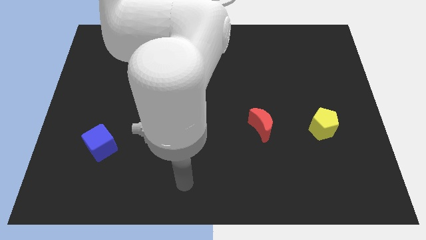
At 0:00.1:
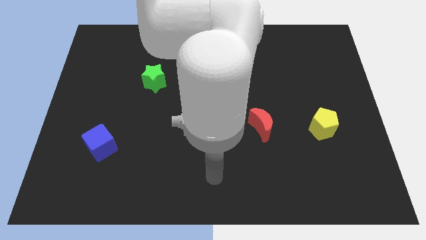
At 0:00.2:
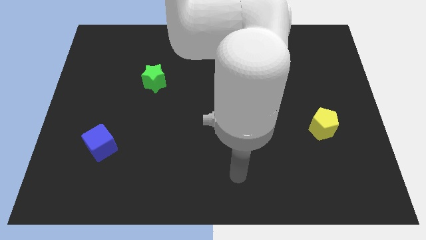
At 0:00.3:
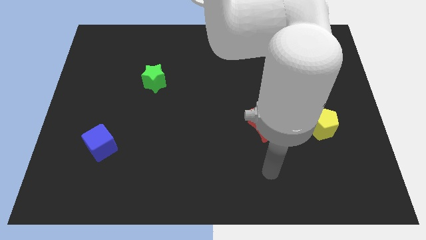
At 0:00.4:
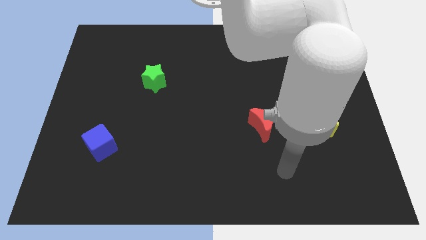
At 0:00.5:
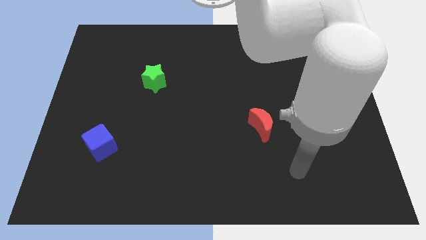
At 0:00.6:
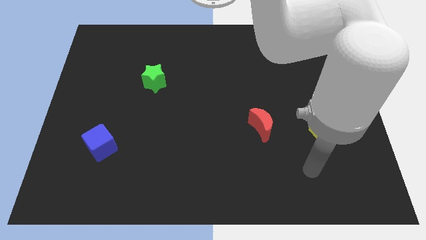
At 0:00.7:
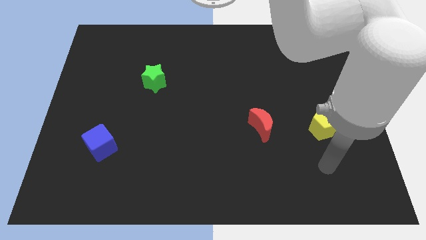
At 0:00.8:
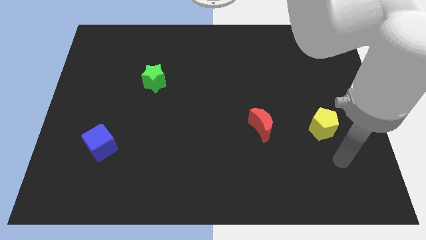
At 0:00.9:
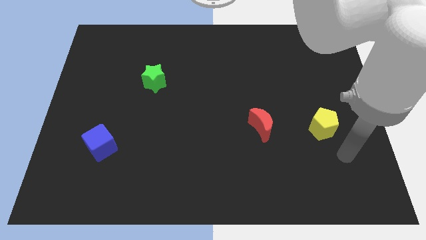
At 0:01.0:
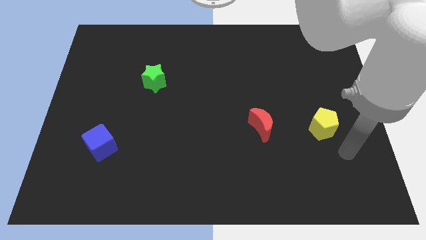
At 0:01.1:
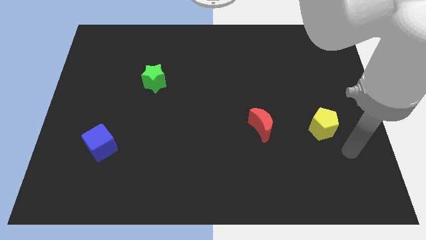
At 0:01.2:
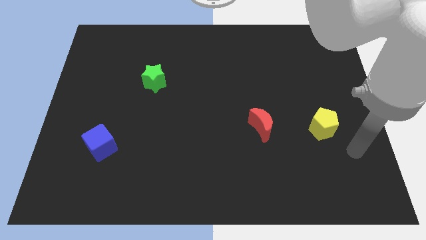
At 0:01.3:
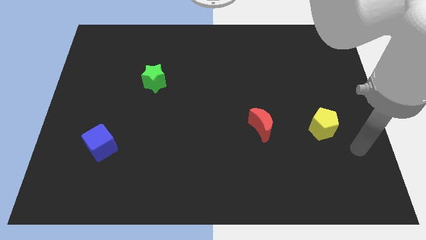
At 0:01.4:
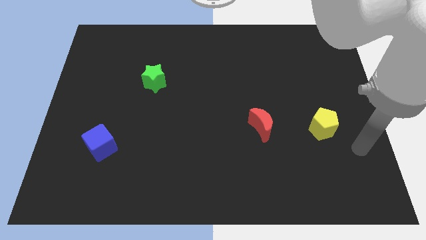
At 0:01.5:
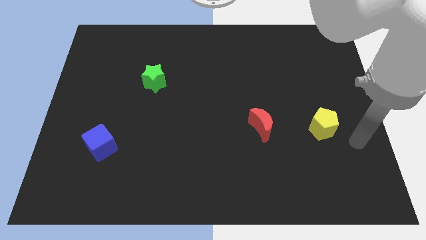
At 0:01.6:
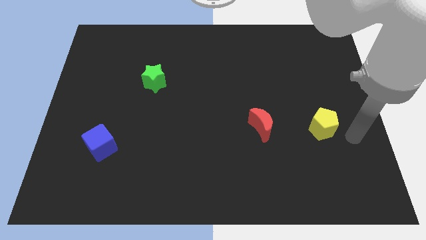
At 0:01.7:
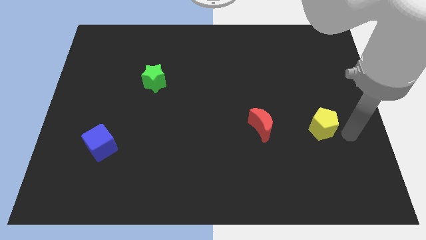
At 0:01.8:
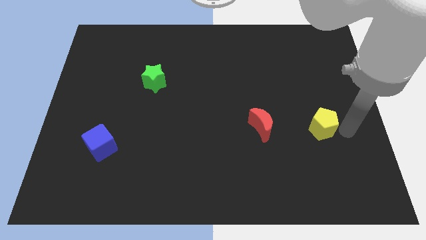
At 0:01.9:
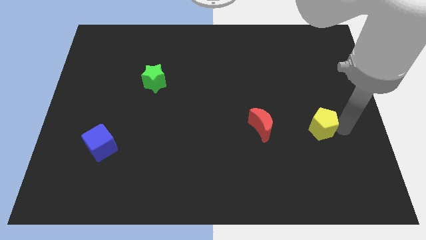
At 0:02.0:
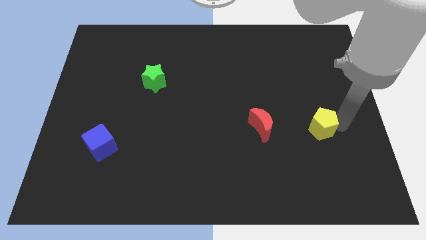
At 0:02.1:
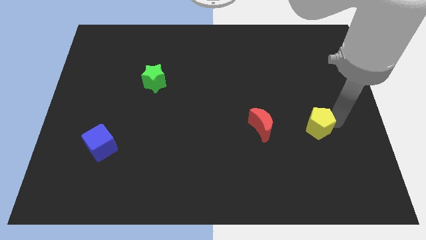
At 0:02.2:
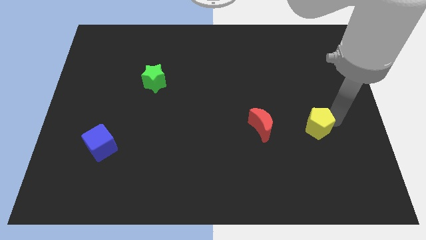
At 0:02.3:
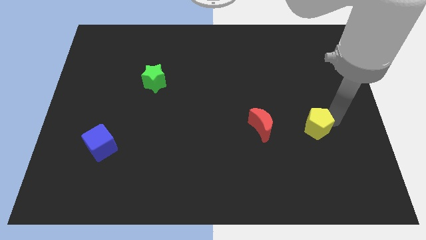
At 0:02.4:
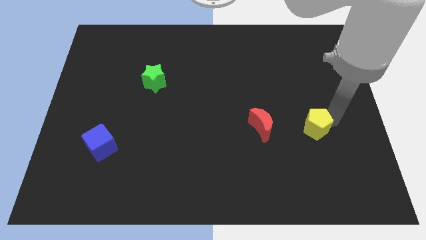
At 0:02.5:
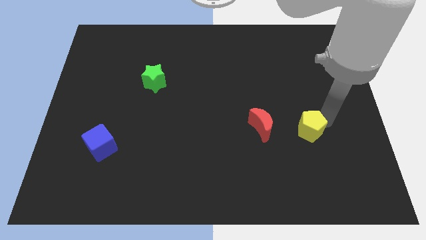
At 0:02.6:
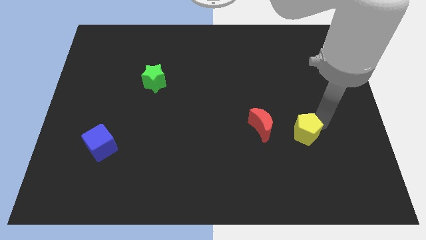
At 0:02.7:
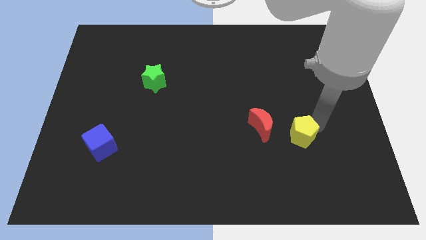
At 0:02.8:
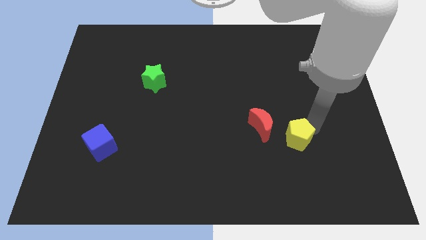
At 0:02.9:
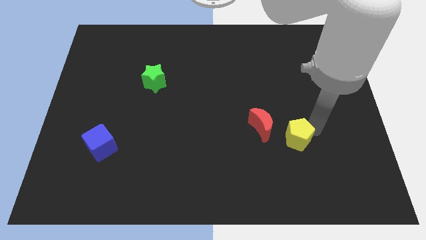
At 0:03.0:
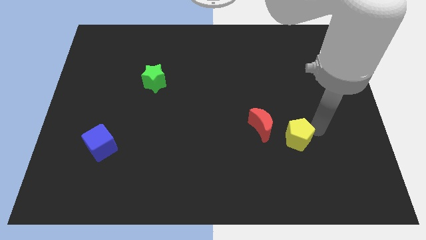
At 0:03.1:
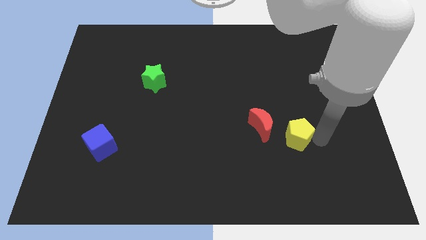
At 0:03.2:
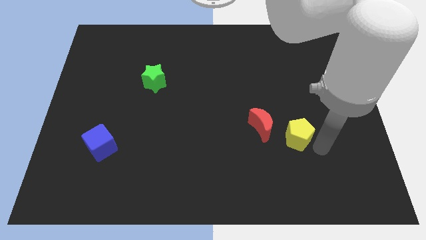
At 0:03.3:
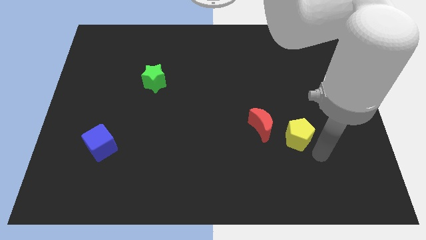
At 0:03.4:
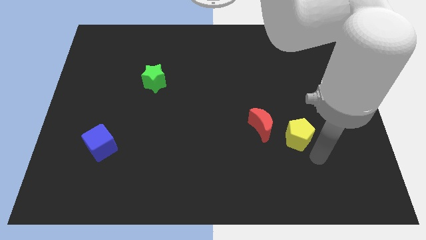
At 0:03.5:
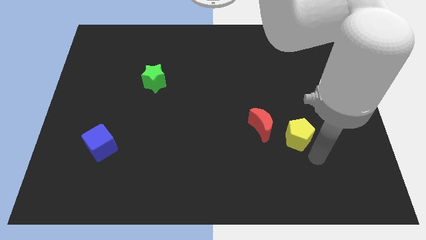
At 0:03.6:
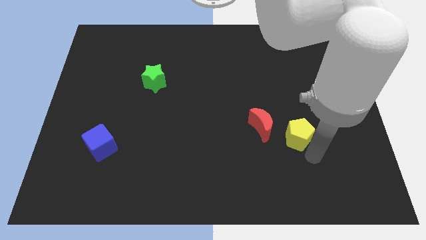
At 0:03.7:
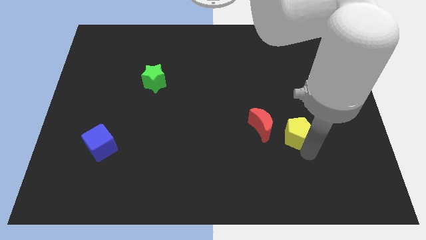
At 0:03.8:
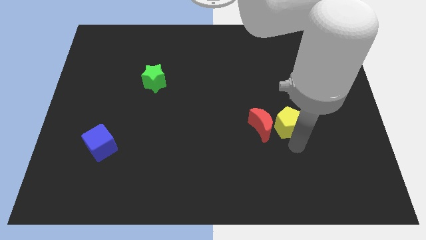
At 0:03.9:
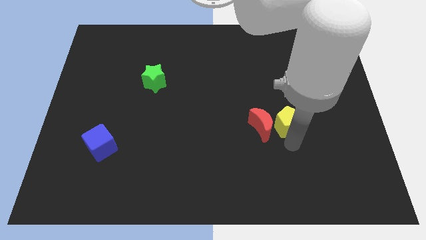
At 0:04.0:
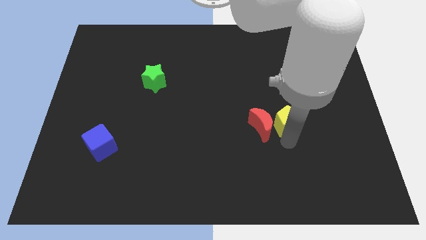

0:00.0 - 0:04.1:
move the yellow pentagon to the moon

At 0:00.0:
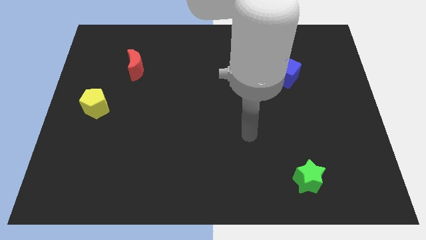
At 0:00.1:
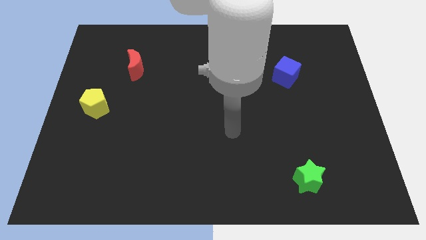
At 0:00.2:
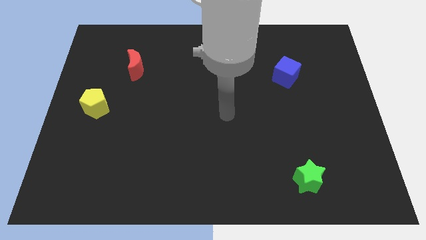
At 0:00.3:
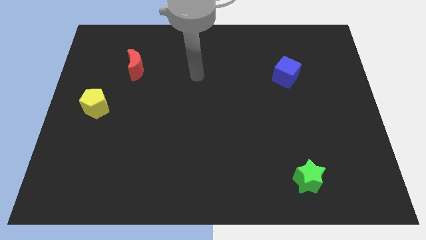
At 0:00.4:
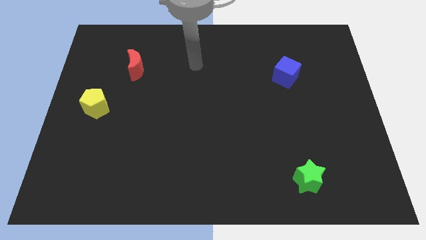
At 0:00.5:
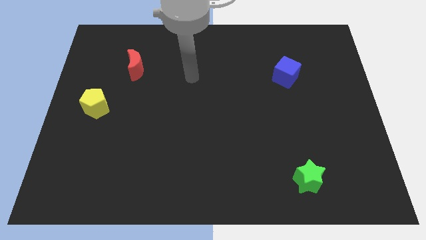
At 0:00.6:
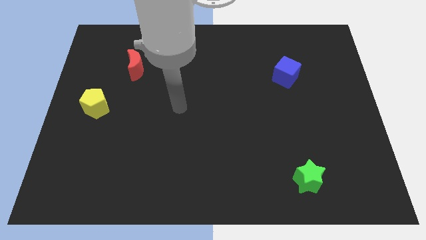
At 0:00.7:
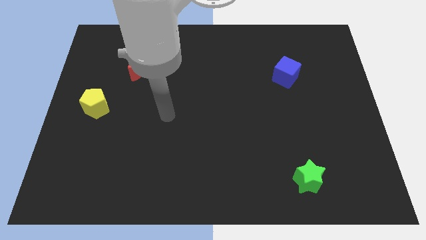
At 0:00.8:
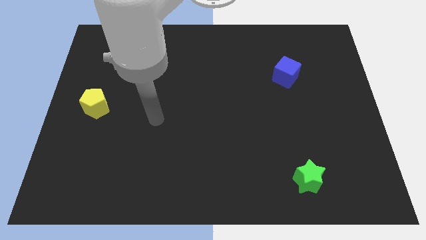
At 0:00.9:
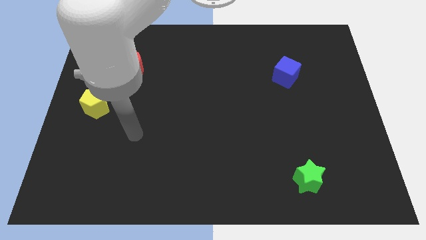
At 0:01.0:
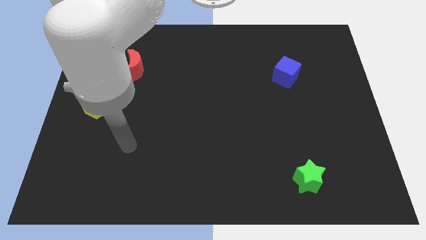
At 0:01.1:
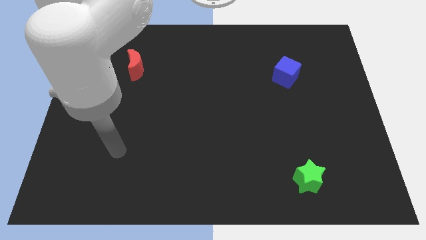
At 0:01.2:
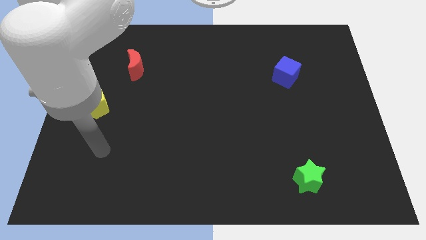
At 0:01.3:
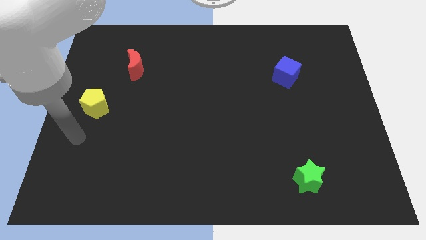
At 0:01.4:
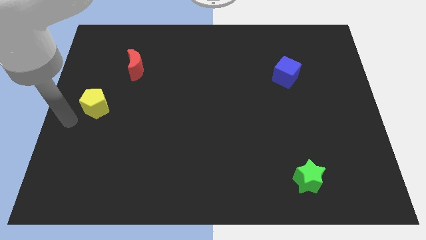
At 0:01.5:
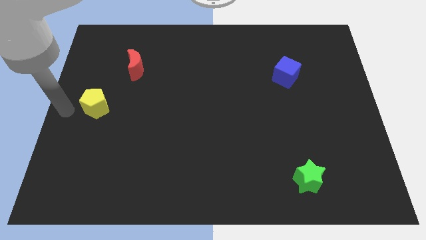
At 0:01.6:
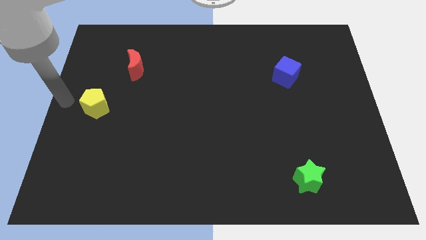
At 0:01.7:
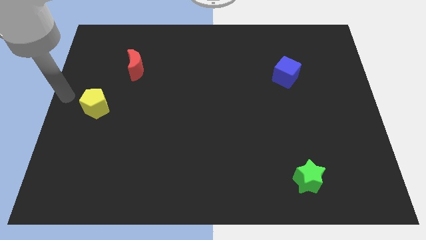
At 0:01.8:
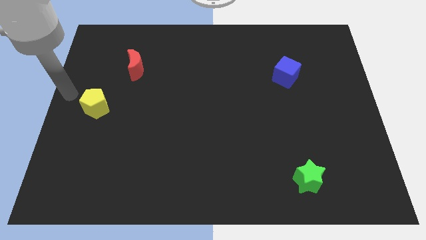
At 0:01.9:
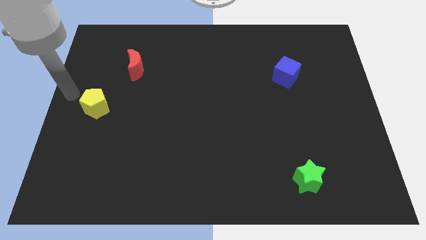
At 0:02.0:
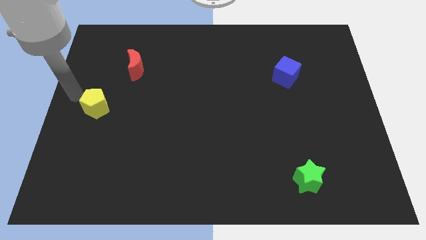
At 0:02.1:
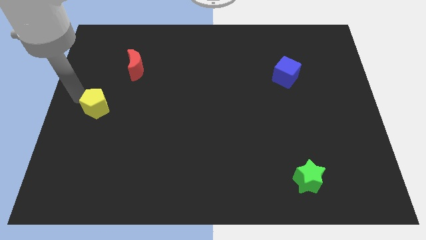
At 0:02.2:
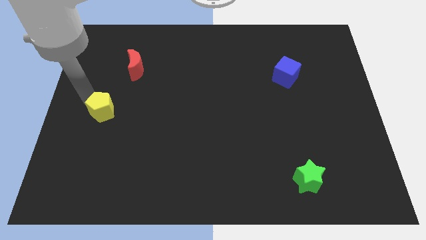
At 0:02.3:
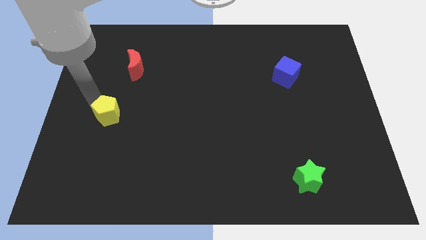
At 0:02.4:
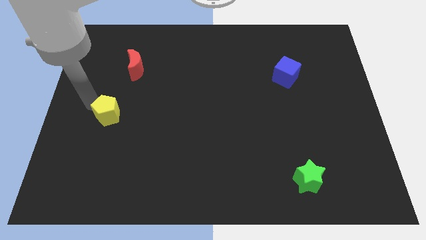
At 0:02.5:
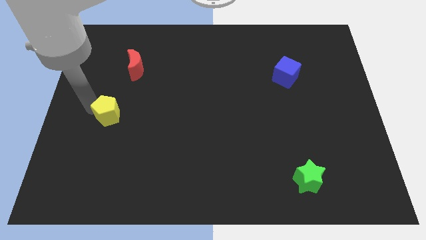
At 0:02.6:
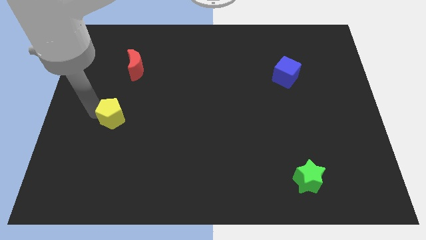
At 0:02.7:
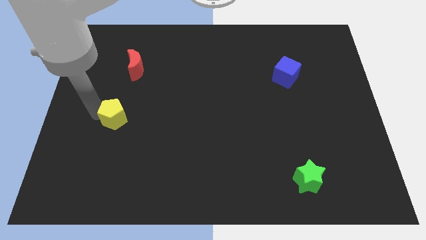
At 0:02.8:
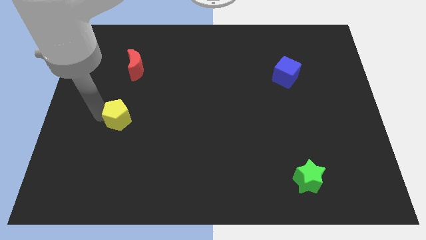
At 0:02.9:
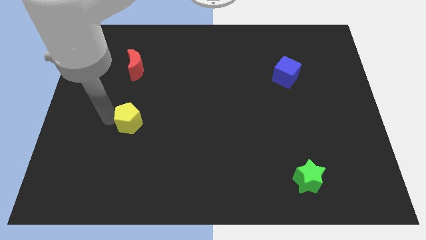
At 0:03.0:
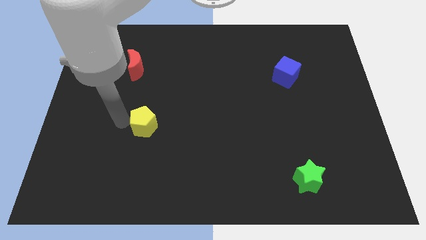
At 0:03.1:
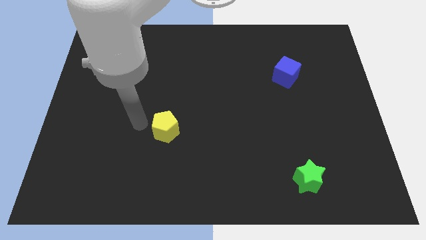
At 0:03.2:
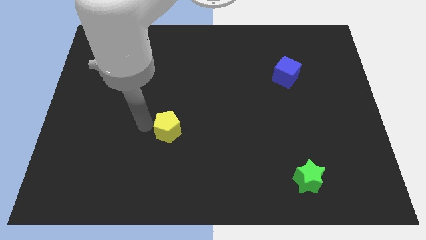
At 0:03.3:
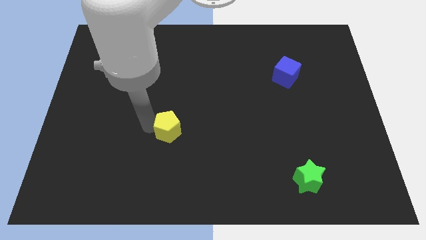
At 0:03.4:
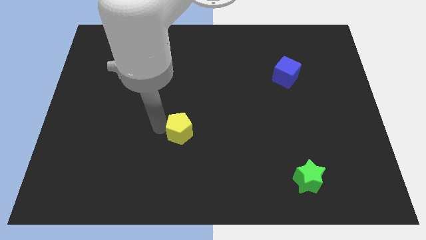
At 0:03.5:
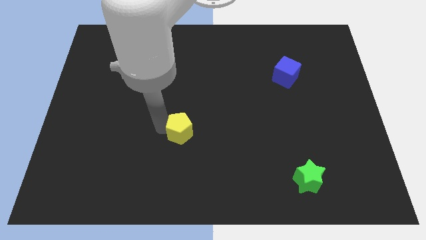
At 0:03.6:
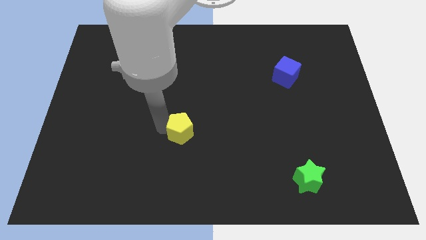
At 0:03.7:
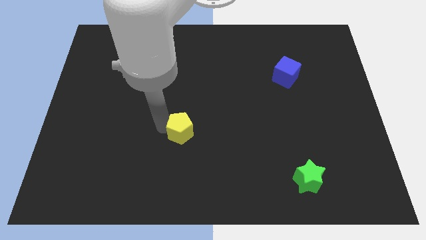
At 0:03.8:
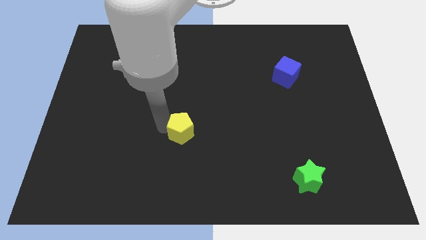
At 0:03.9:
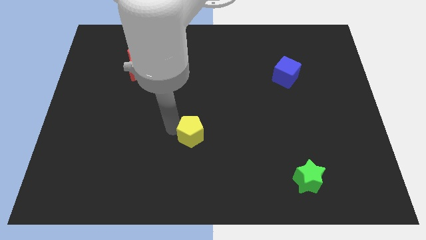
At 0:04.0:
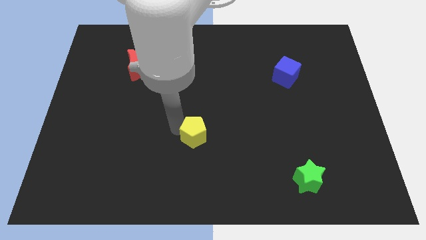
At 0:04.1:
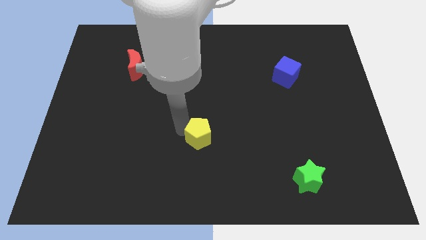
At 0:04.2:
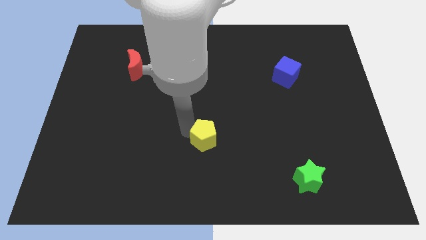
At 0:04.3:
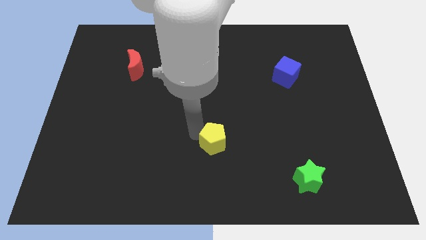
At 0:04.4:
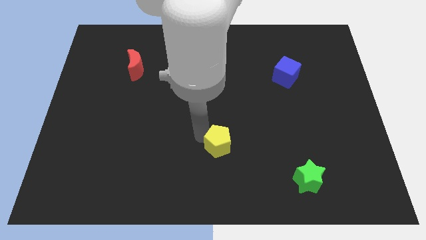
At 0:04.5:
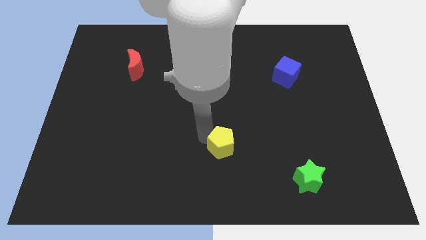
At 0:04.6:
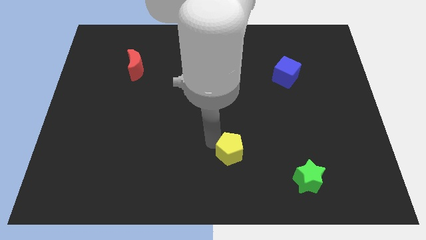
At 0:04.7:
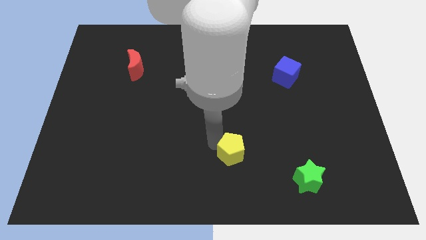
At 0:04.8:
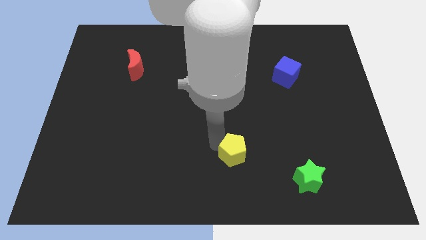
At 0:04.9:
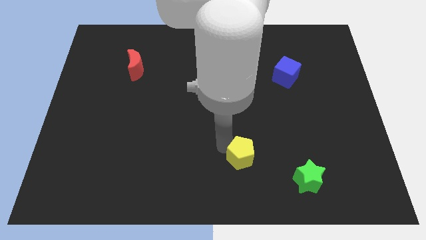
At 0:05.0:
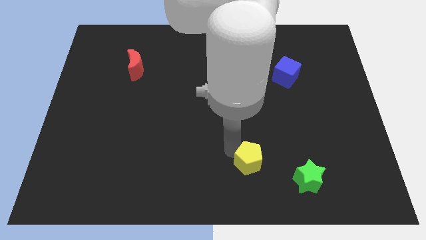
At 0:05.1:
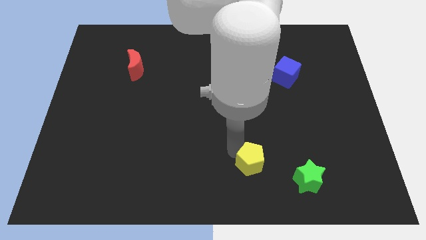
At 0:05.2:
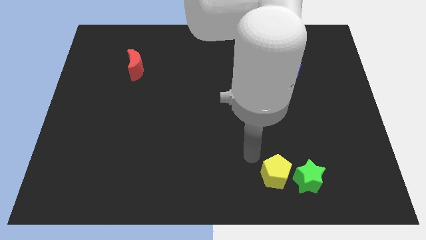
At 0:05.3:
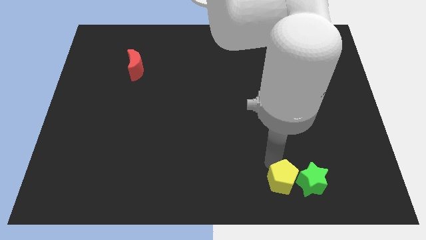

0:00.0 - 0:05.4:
push the yellow block next to the star
